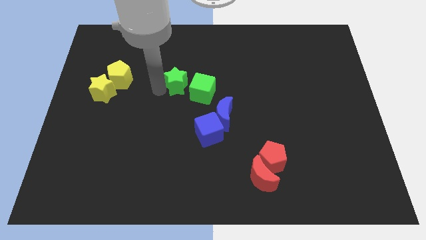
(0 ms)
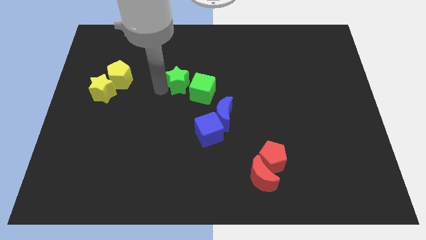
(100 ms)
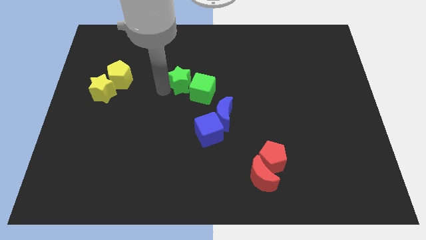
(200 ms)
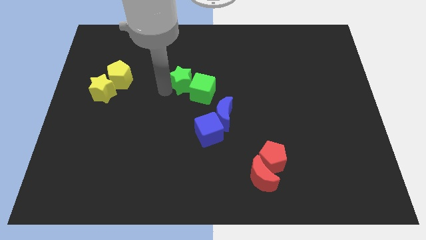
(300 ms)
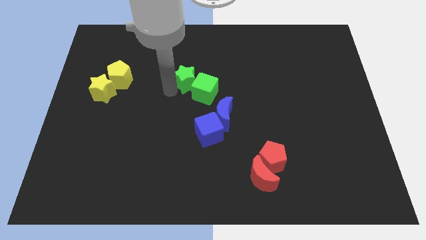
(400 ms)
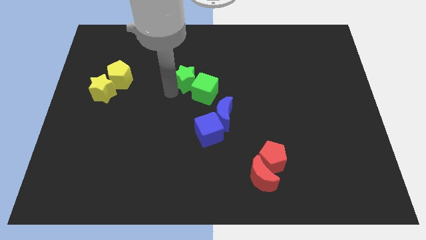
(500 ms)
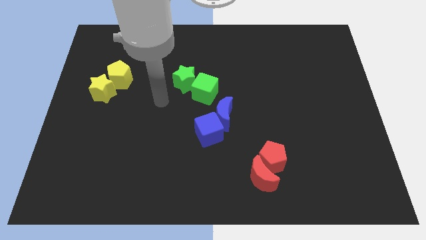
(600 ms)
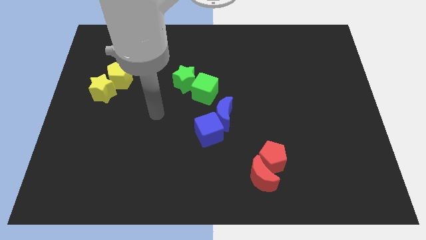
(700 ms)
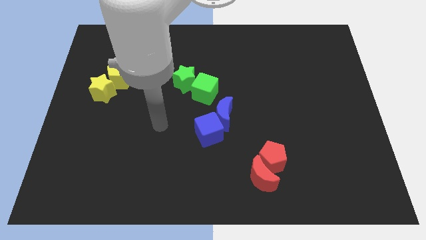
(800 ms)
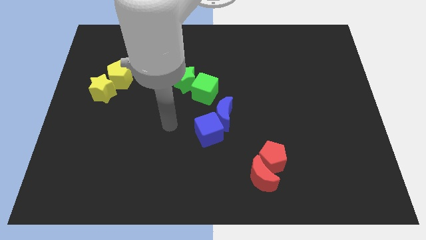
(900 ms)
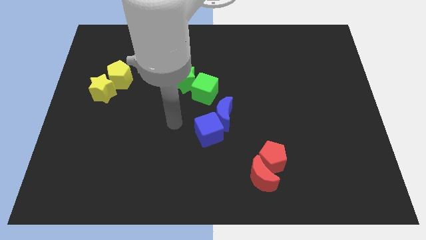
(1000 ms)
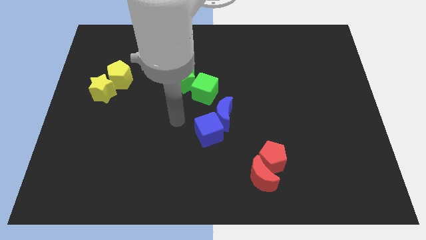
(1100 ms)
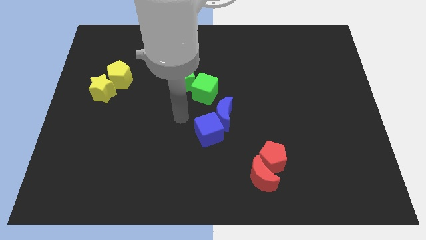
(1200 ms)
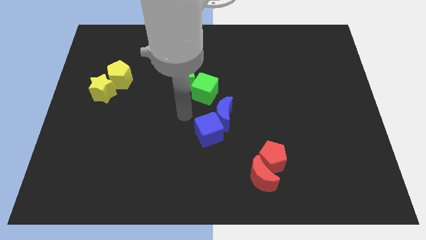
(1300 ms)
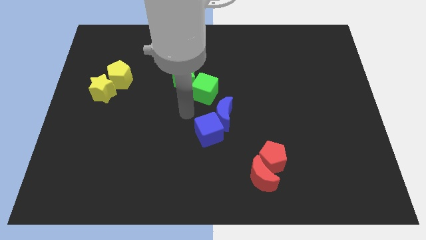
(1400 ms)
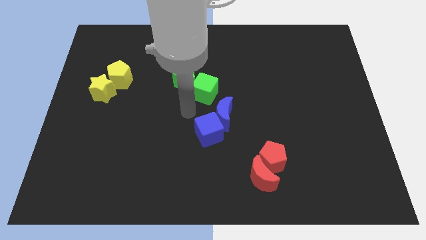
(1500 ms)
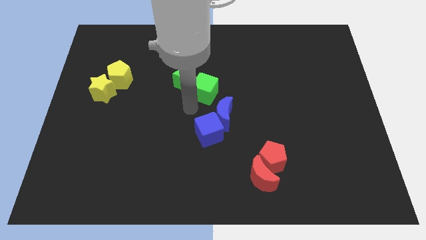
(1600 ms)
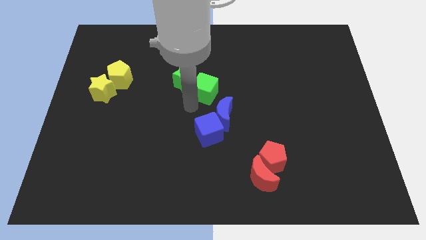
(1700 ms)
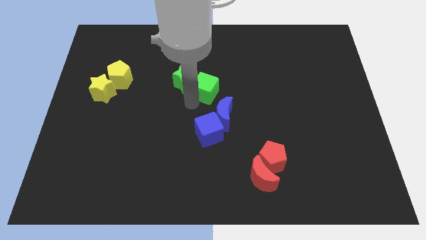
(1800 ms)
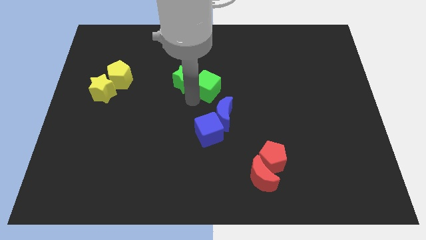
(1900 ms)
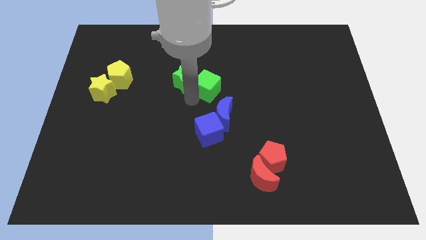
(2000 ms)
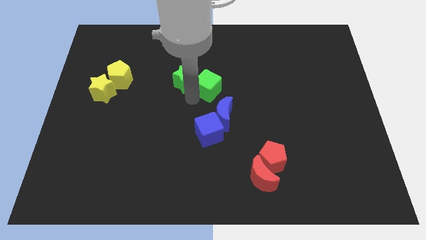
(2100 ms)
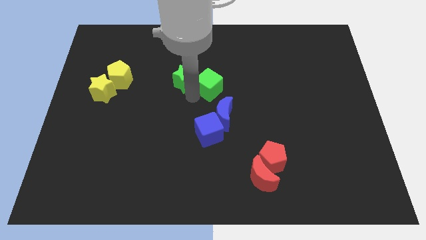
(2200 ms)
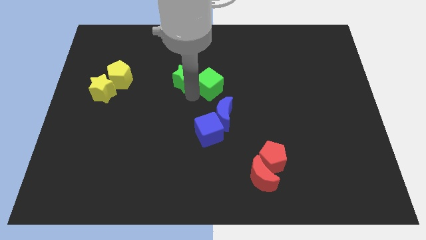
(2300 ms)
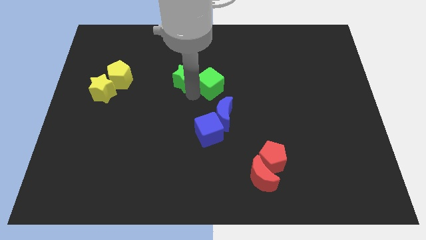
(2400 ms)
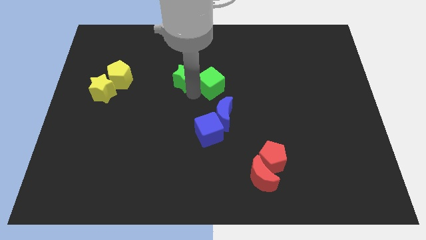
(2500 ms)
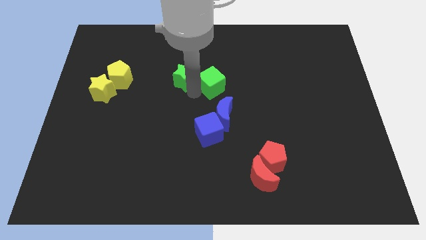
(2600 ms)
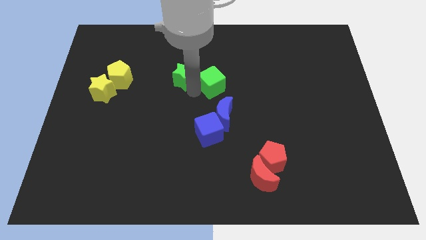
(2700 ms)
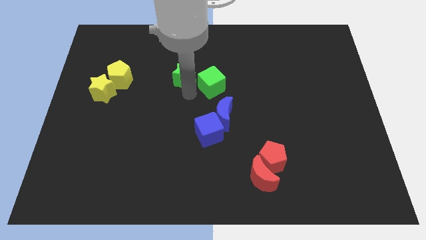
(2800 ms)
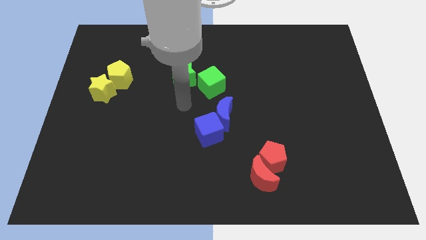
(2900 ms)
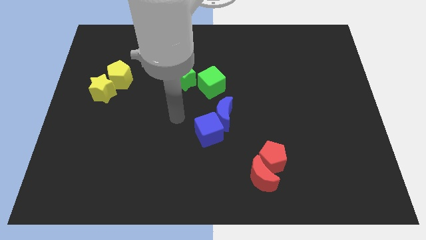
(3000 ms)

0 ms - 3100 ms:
move green cube slightly up

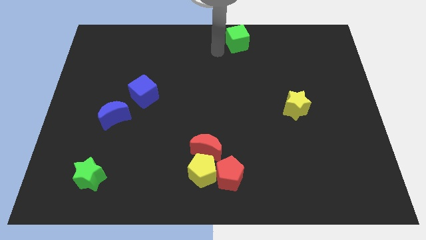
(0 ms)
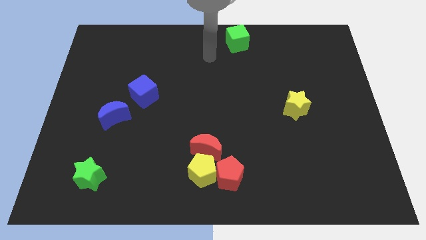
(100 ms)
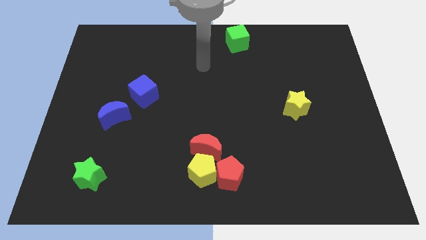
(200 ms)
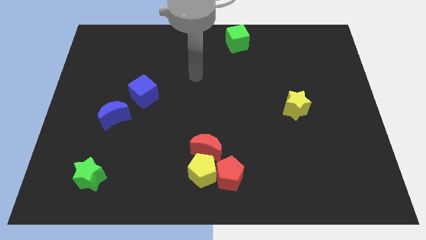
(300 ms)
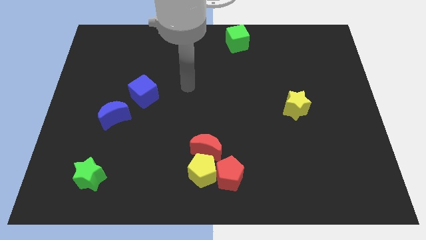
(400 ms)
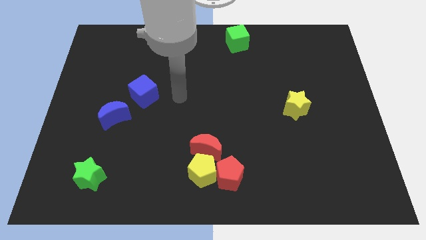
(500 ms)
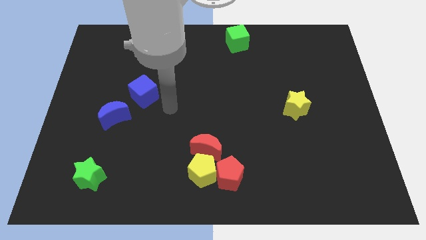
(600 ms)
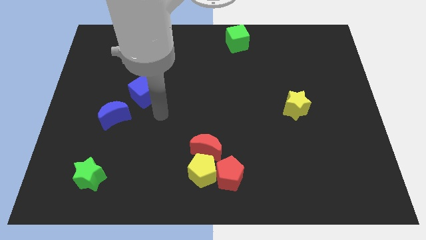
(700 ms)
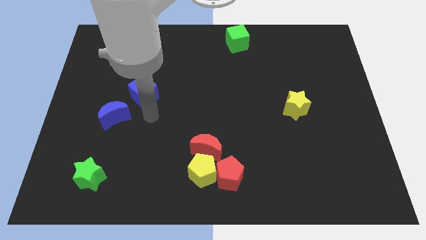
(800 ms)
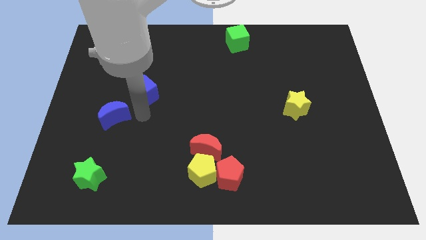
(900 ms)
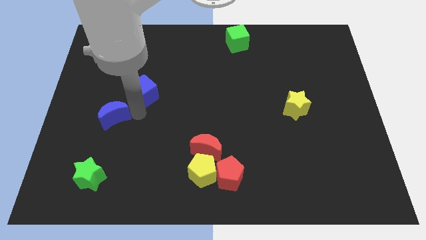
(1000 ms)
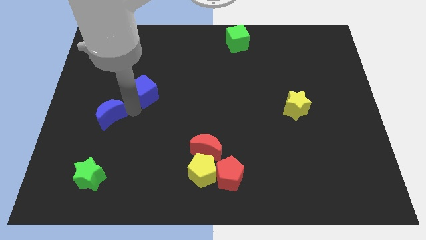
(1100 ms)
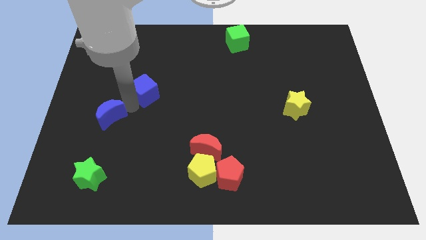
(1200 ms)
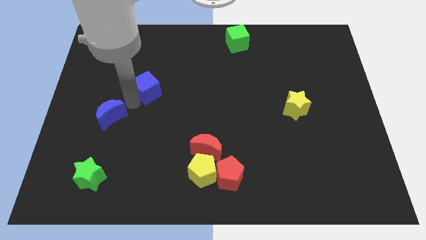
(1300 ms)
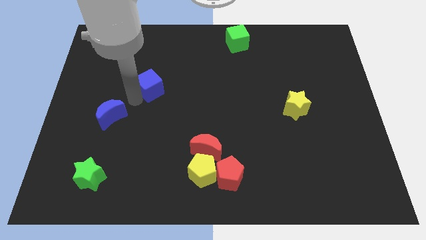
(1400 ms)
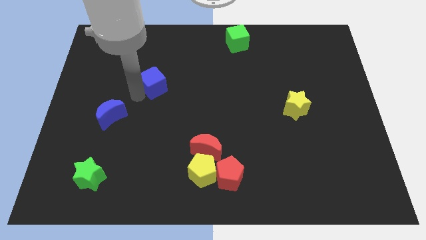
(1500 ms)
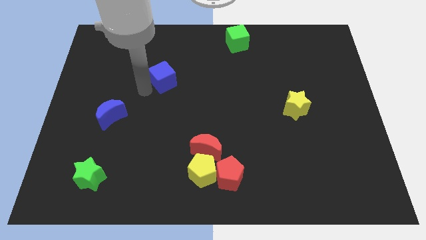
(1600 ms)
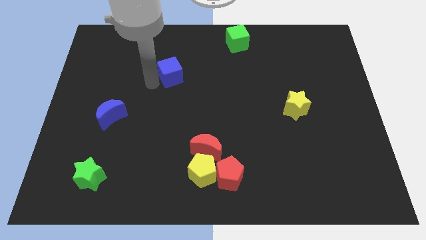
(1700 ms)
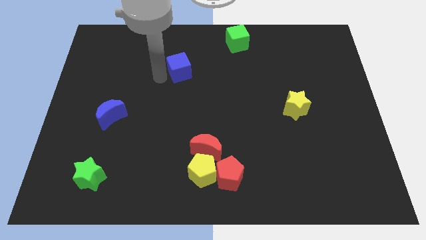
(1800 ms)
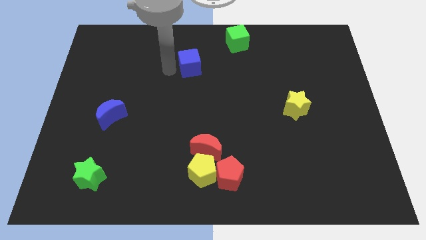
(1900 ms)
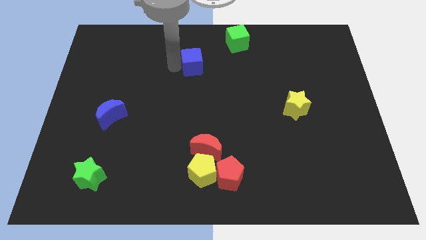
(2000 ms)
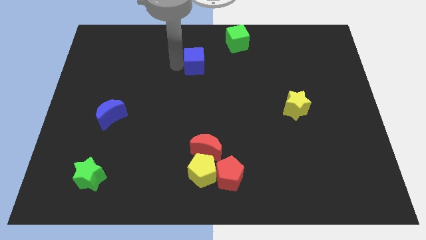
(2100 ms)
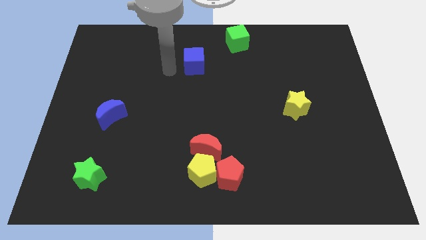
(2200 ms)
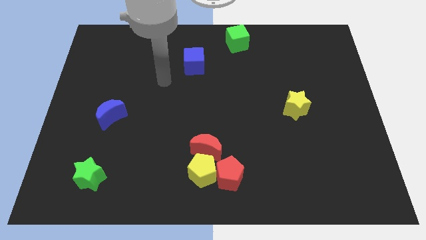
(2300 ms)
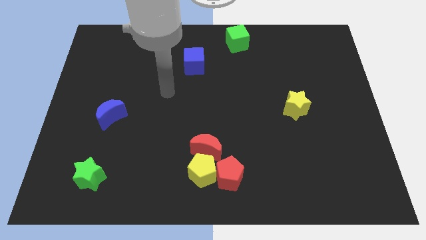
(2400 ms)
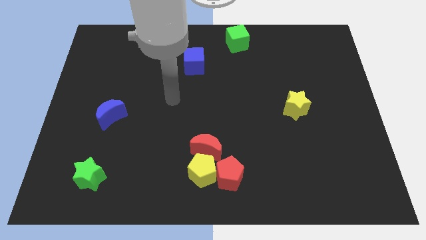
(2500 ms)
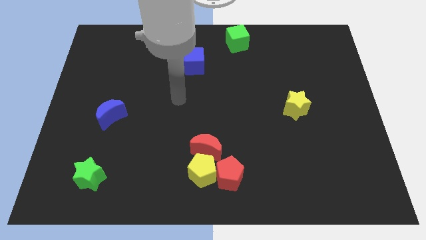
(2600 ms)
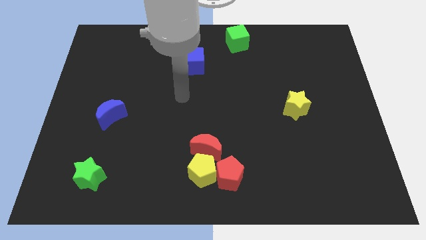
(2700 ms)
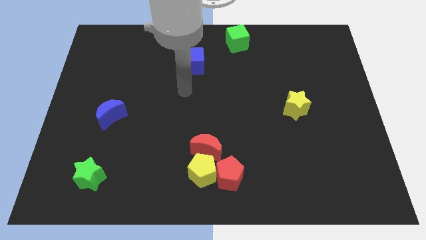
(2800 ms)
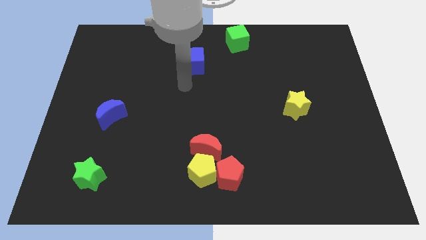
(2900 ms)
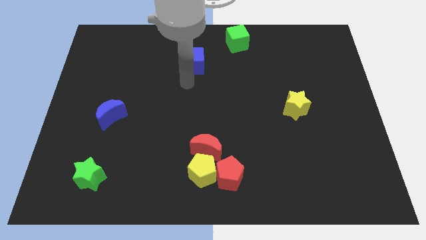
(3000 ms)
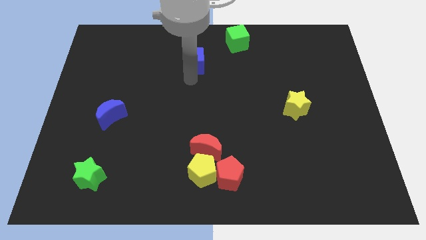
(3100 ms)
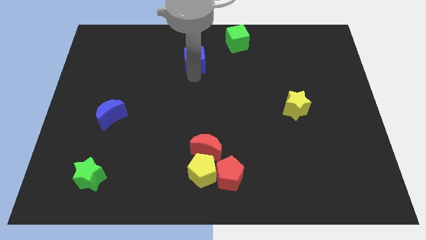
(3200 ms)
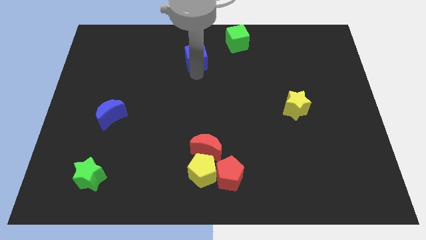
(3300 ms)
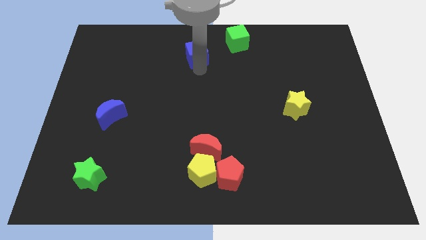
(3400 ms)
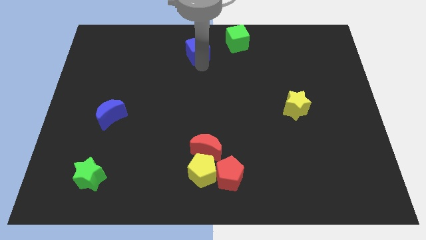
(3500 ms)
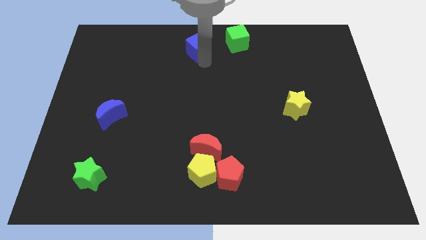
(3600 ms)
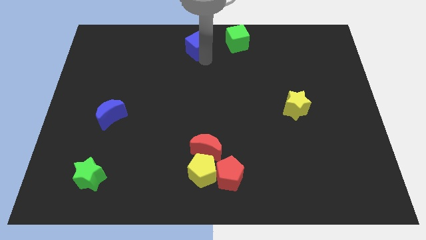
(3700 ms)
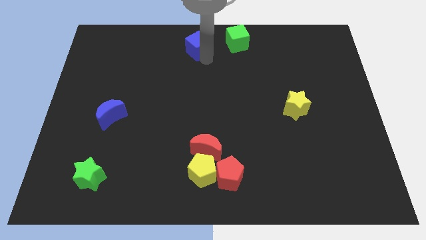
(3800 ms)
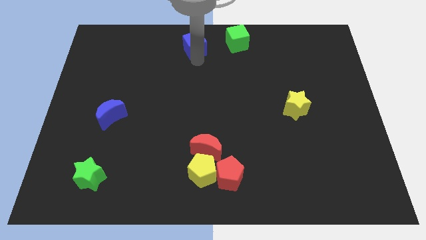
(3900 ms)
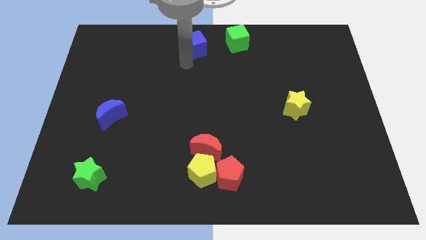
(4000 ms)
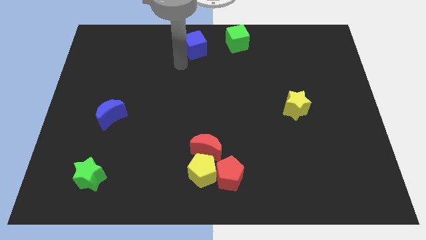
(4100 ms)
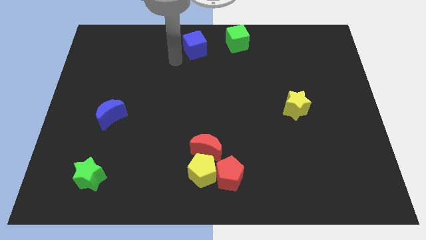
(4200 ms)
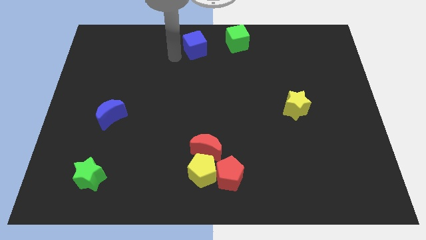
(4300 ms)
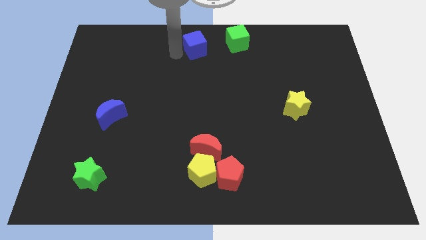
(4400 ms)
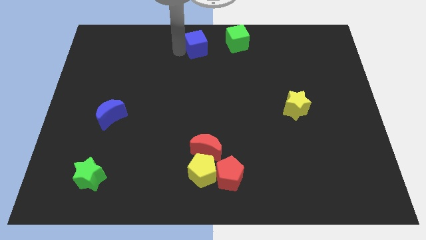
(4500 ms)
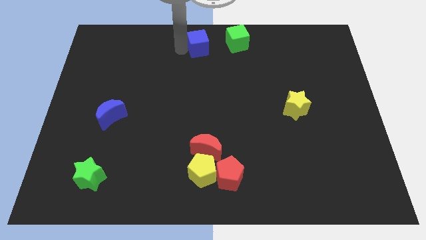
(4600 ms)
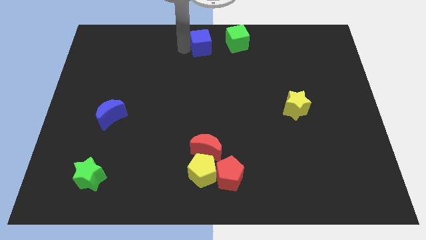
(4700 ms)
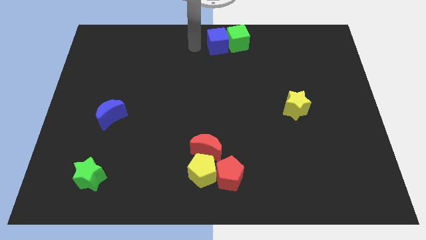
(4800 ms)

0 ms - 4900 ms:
push the blue cube into the left side of the green cube

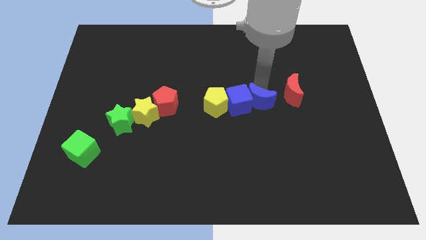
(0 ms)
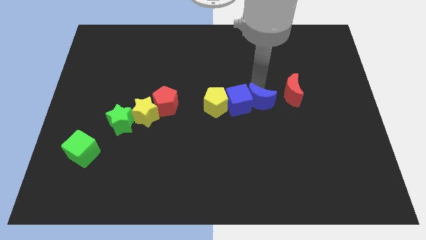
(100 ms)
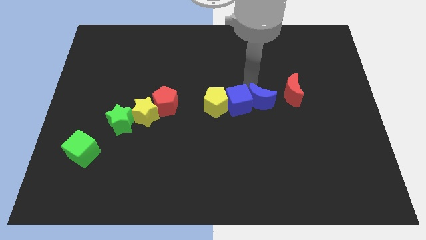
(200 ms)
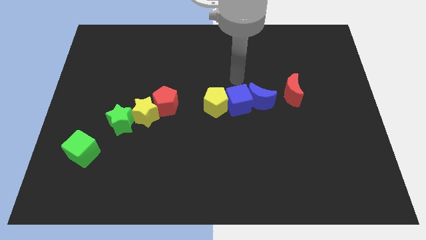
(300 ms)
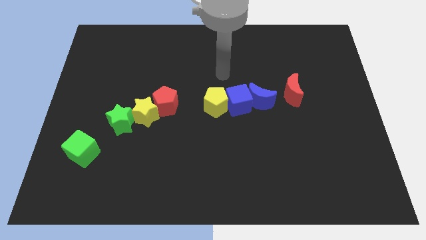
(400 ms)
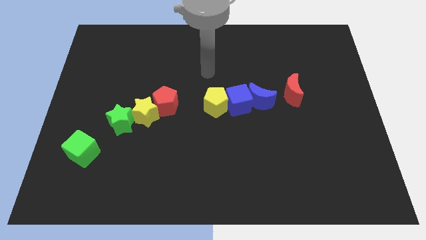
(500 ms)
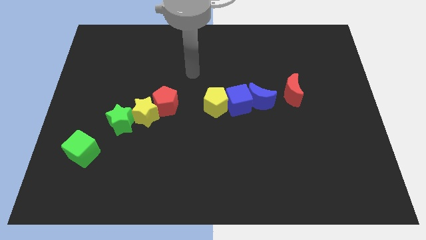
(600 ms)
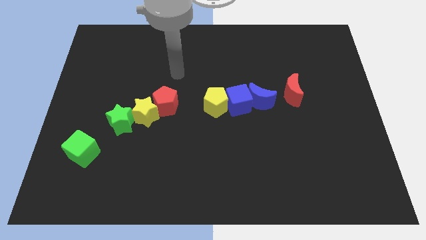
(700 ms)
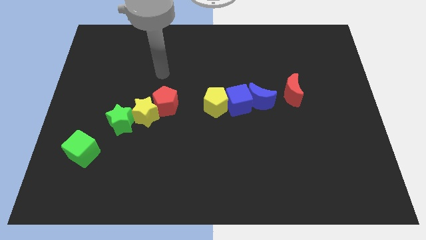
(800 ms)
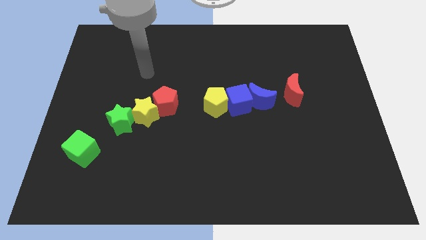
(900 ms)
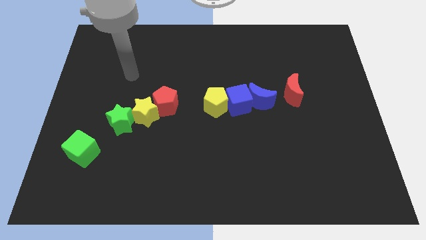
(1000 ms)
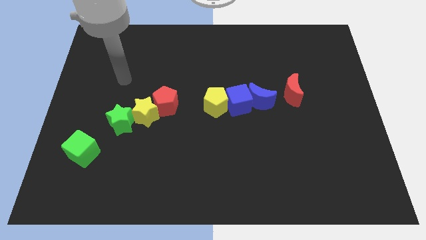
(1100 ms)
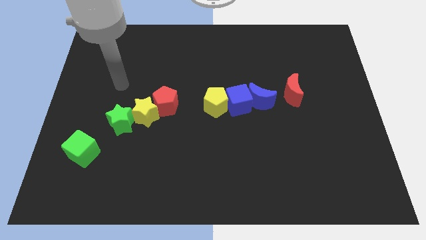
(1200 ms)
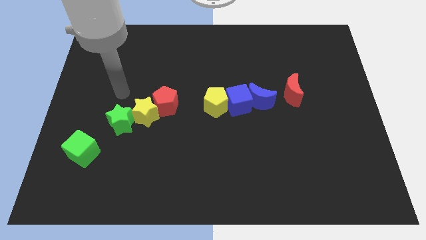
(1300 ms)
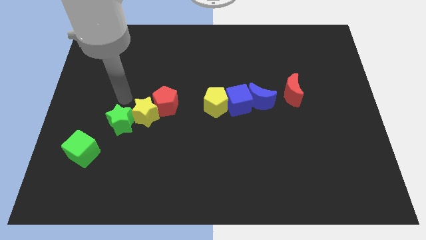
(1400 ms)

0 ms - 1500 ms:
point your arm at the top side of the green star
